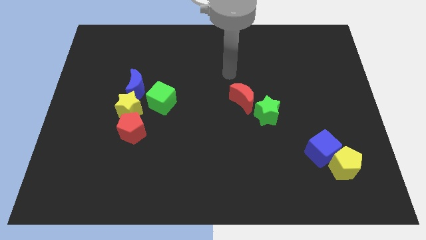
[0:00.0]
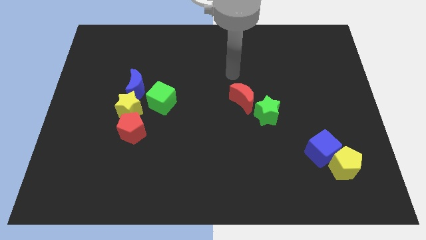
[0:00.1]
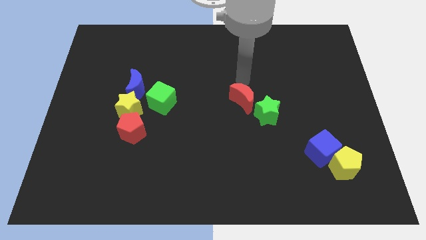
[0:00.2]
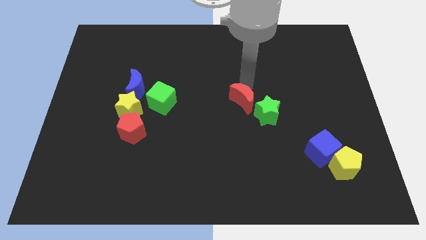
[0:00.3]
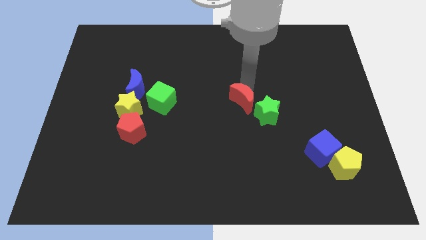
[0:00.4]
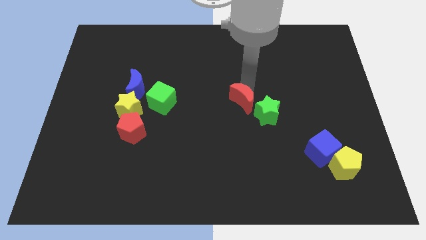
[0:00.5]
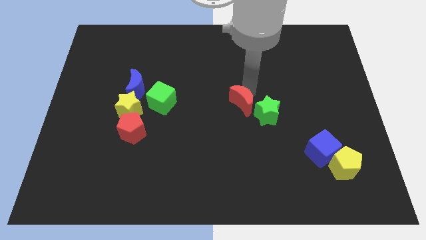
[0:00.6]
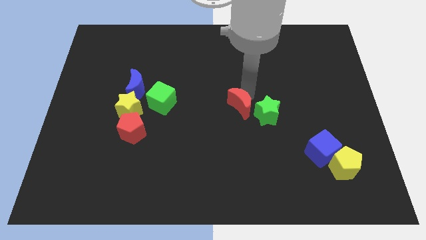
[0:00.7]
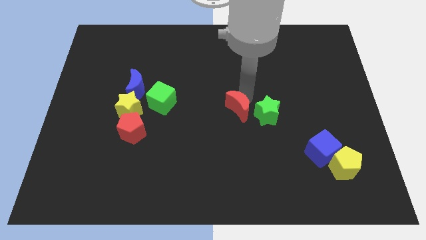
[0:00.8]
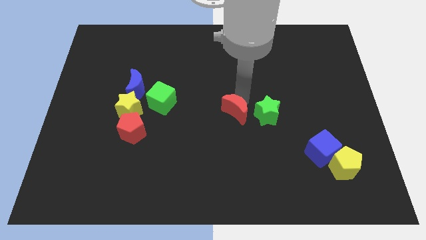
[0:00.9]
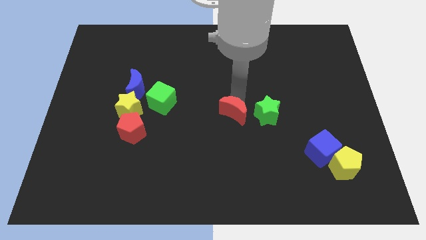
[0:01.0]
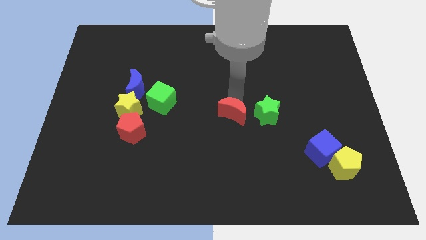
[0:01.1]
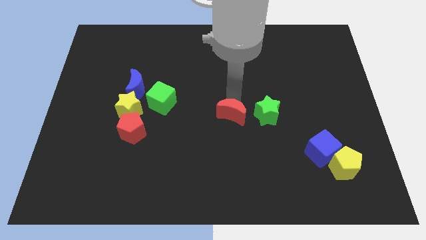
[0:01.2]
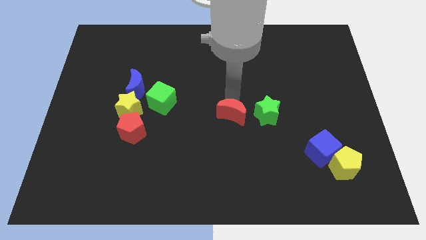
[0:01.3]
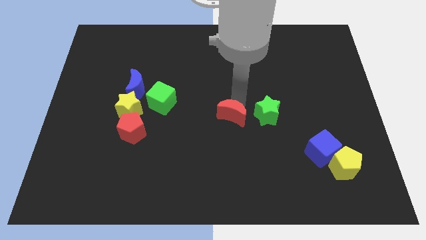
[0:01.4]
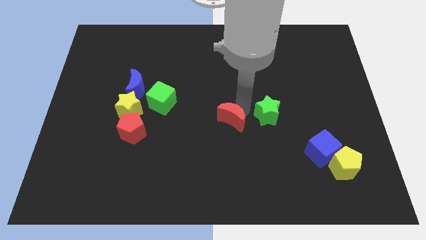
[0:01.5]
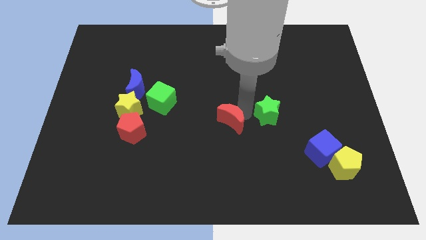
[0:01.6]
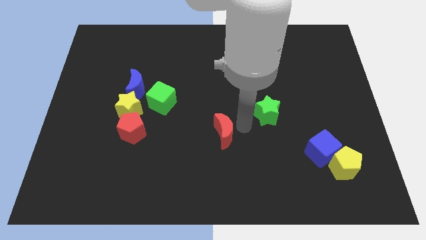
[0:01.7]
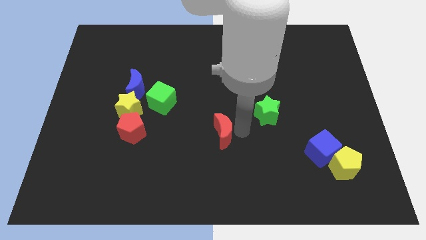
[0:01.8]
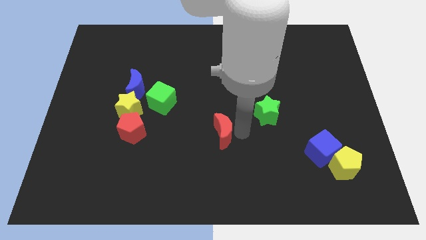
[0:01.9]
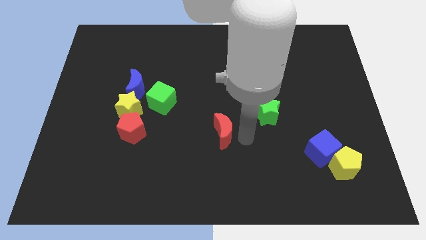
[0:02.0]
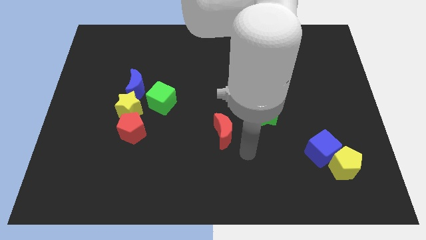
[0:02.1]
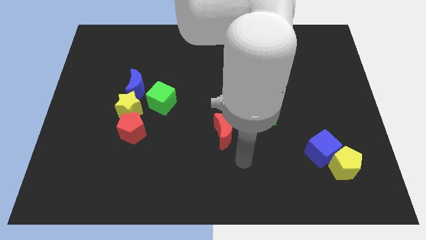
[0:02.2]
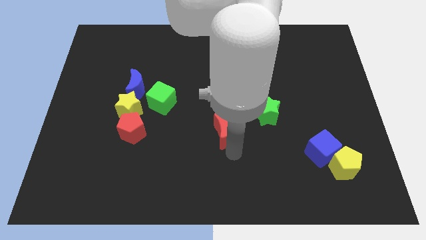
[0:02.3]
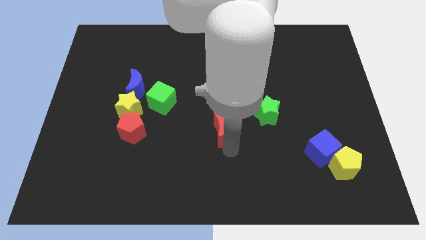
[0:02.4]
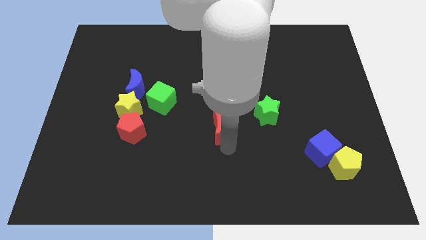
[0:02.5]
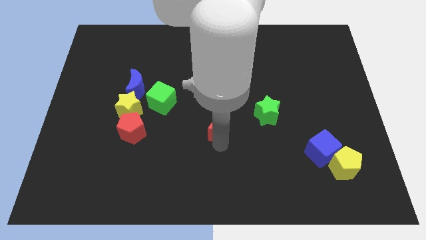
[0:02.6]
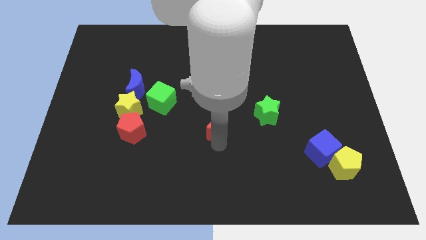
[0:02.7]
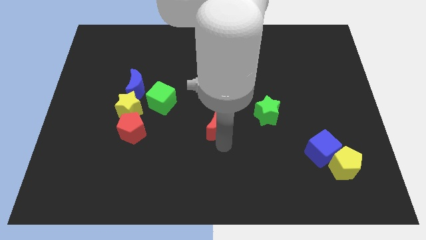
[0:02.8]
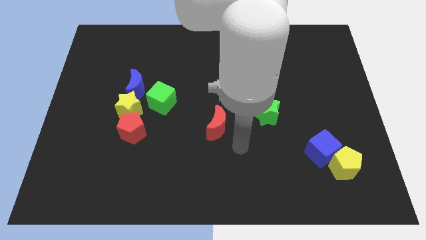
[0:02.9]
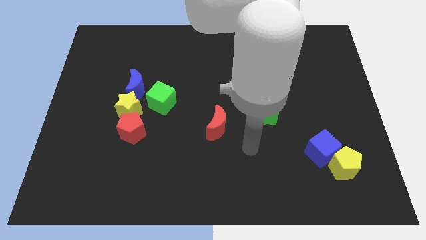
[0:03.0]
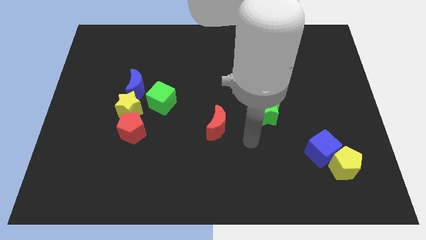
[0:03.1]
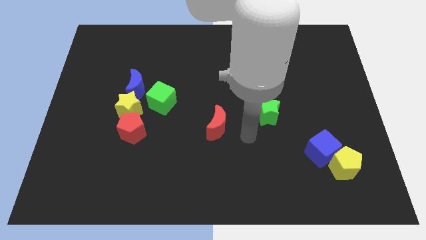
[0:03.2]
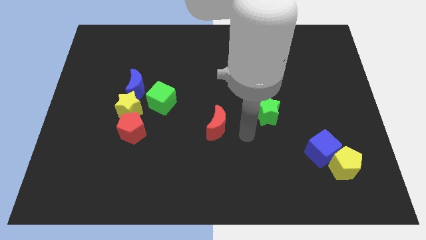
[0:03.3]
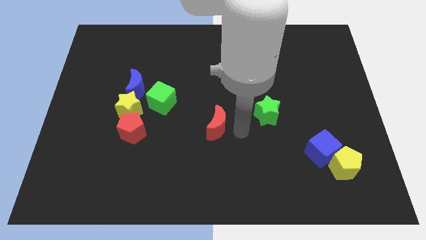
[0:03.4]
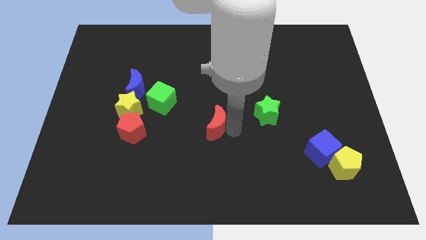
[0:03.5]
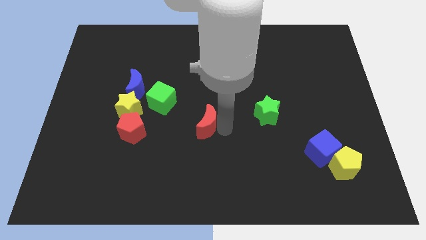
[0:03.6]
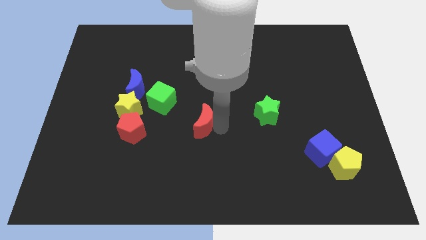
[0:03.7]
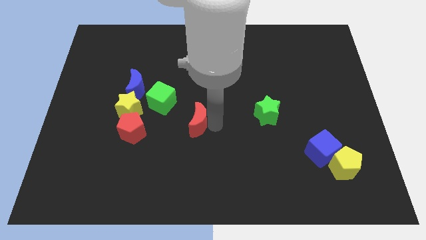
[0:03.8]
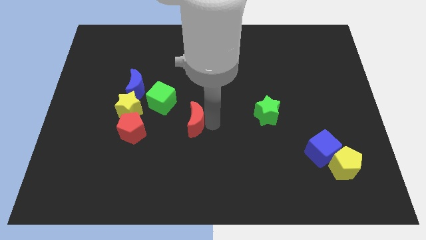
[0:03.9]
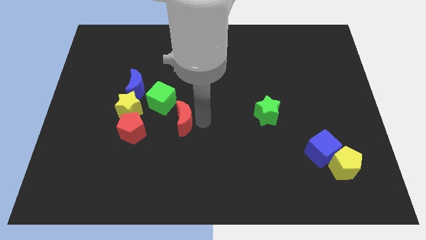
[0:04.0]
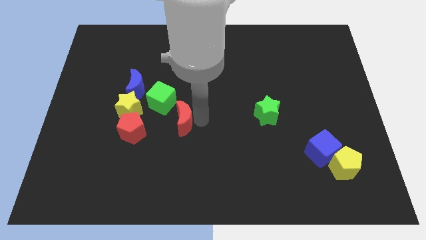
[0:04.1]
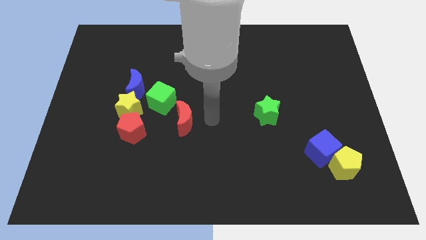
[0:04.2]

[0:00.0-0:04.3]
push the red crescent to the right of the green cube

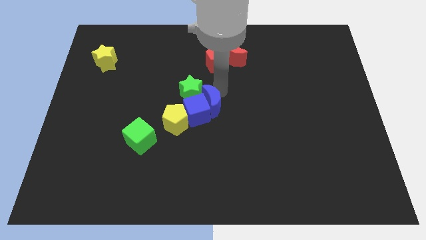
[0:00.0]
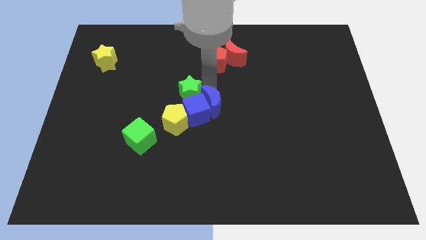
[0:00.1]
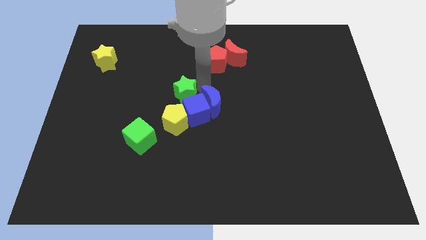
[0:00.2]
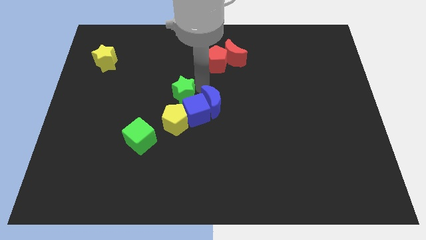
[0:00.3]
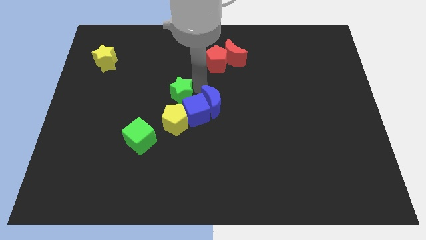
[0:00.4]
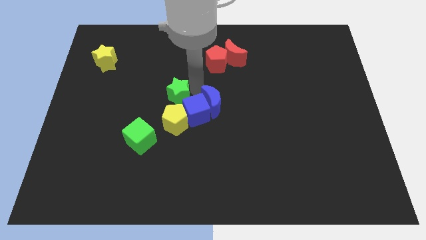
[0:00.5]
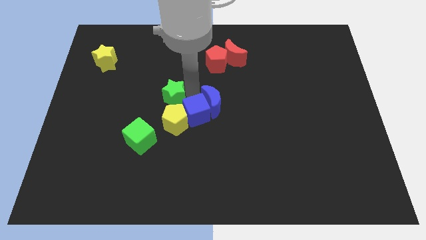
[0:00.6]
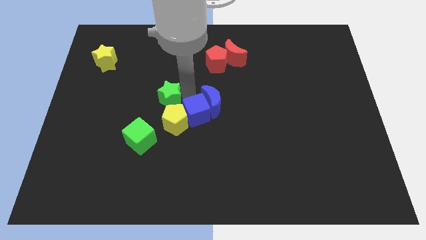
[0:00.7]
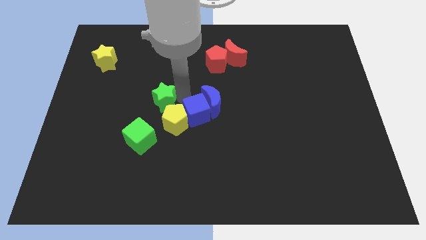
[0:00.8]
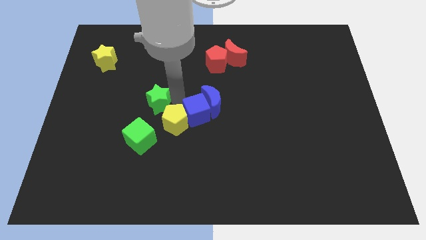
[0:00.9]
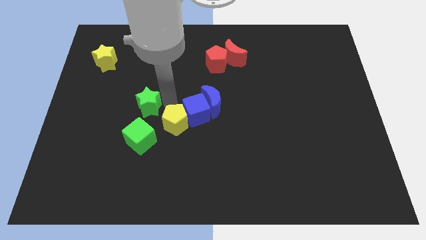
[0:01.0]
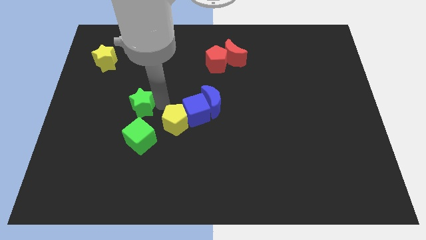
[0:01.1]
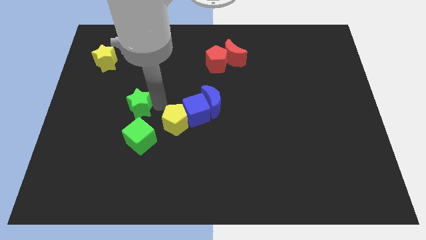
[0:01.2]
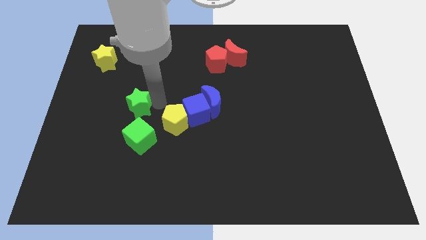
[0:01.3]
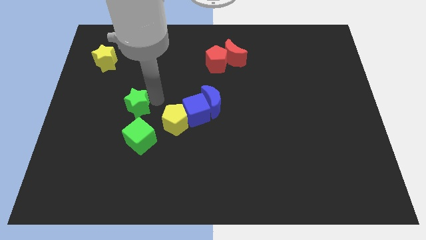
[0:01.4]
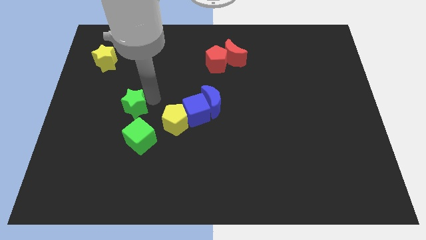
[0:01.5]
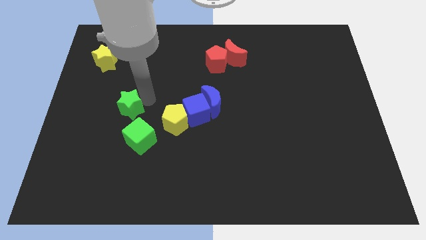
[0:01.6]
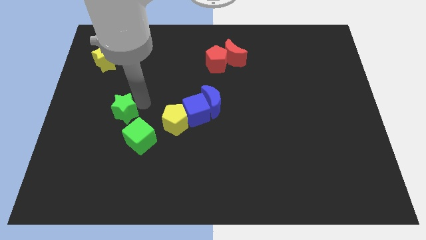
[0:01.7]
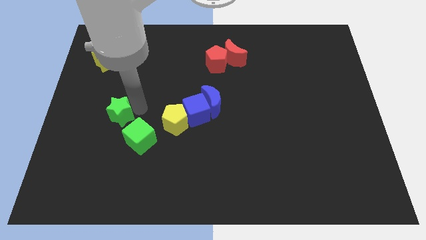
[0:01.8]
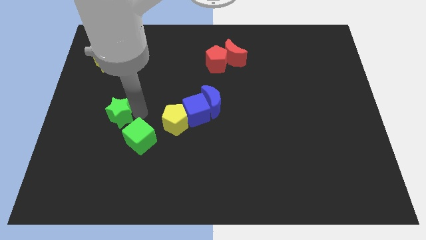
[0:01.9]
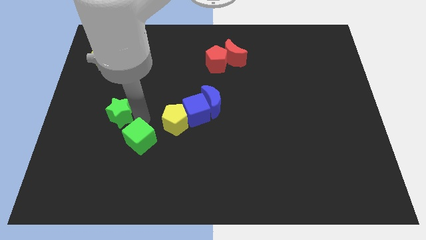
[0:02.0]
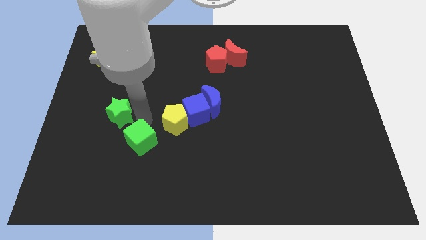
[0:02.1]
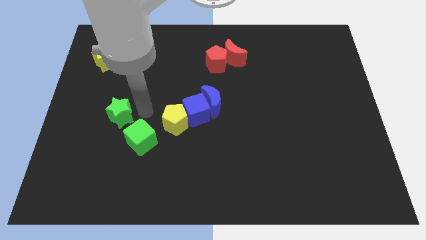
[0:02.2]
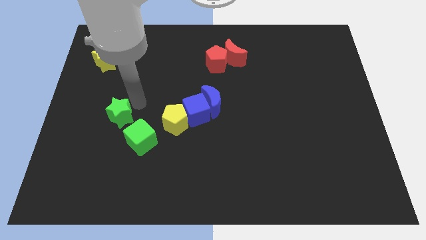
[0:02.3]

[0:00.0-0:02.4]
put the green star in between the green cube and yellow star

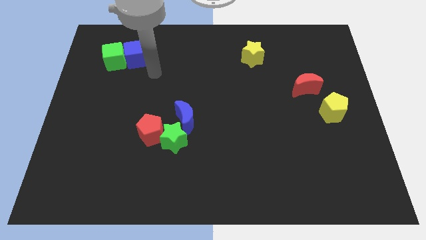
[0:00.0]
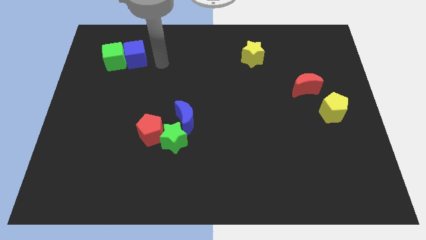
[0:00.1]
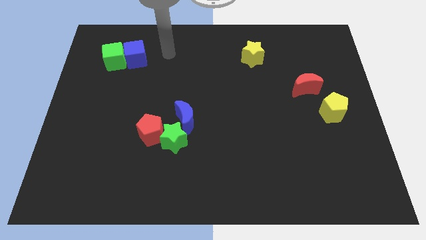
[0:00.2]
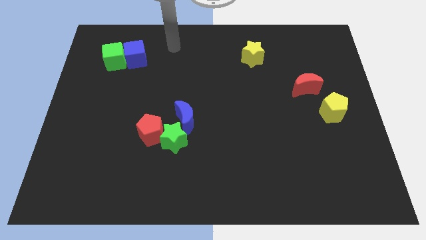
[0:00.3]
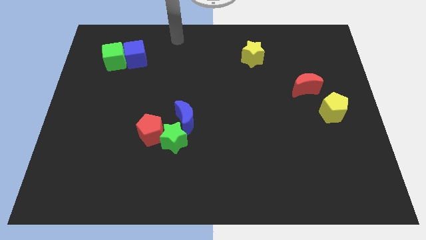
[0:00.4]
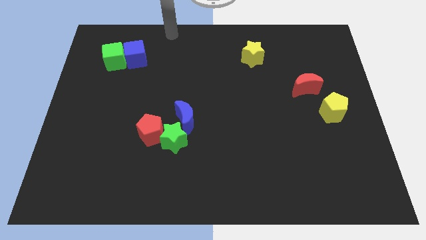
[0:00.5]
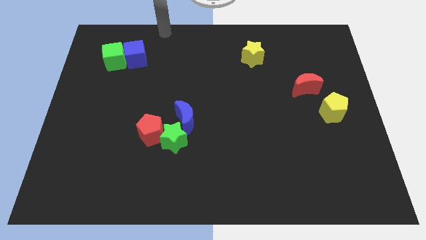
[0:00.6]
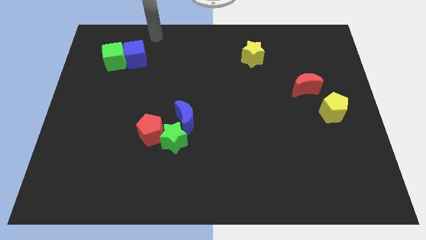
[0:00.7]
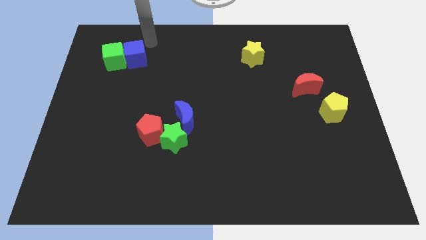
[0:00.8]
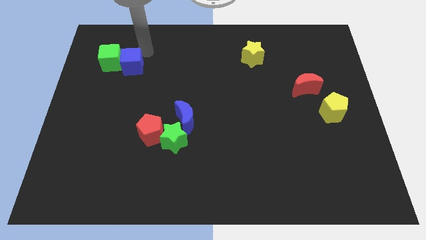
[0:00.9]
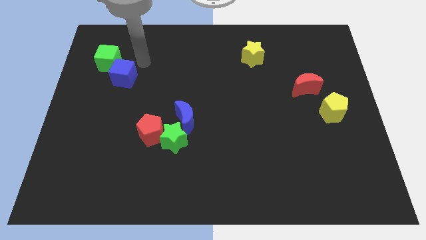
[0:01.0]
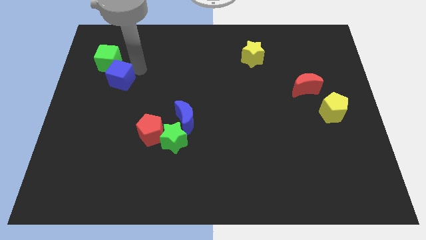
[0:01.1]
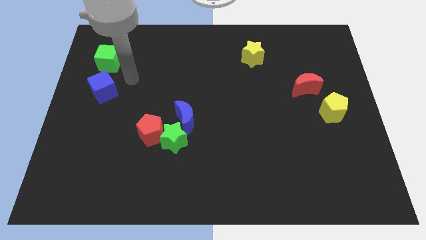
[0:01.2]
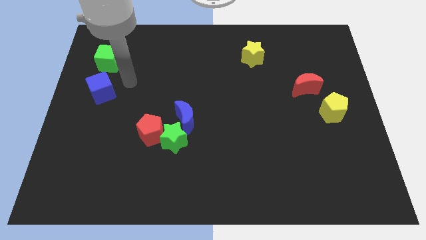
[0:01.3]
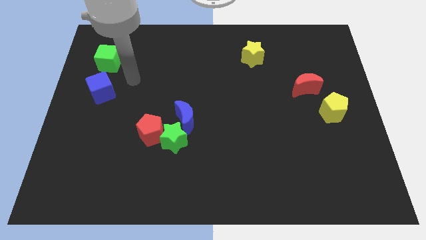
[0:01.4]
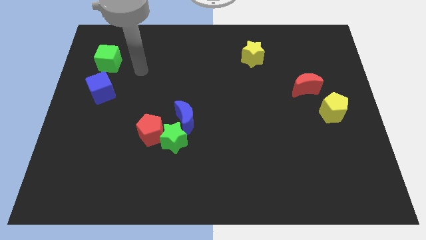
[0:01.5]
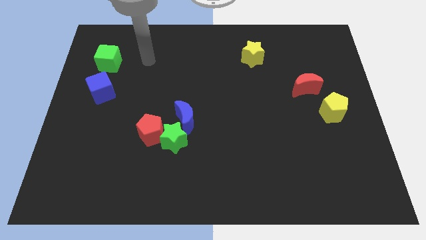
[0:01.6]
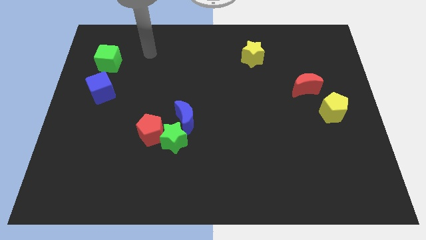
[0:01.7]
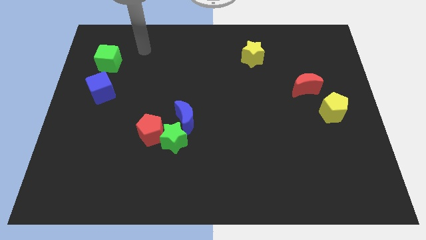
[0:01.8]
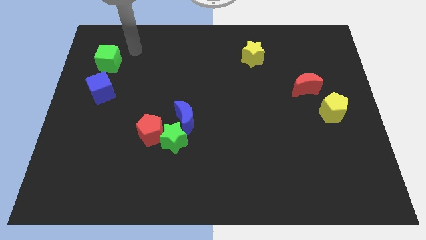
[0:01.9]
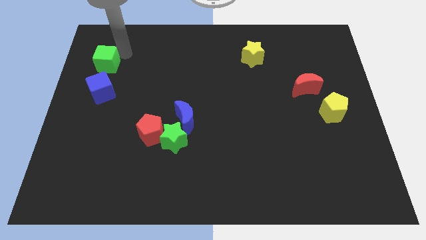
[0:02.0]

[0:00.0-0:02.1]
separate the green cube and the blue cube
